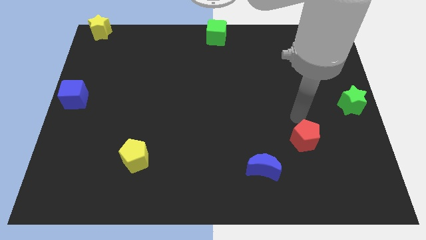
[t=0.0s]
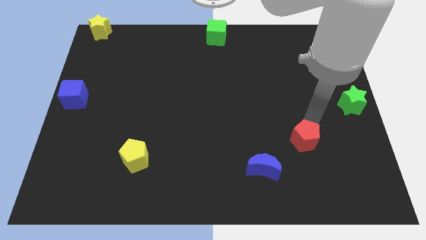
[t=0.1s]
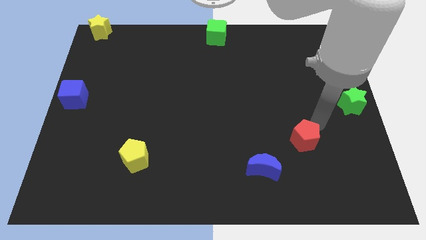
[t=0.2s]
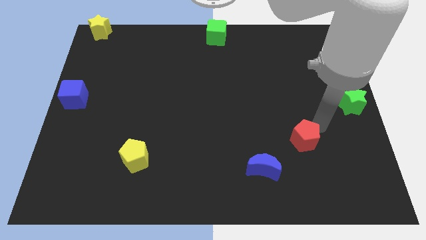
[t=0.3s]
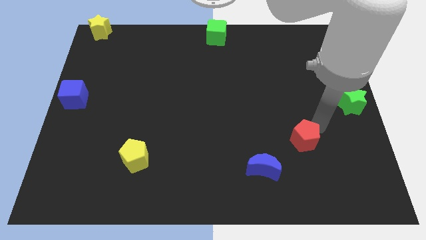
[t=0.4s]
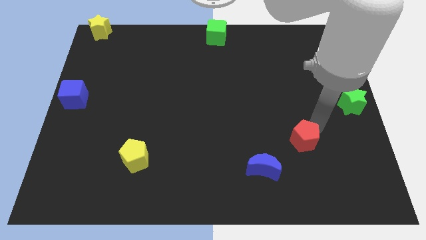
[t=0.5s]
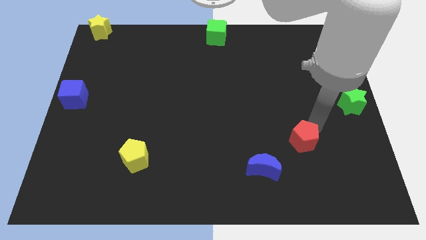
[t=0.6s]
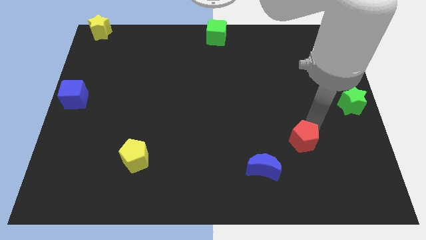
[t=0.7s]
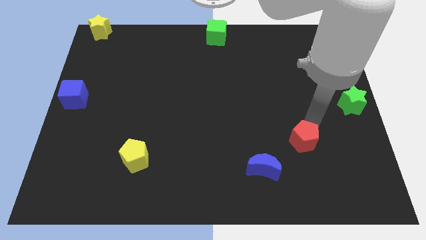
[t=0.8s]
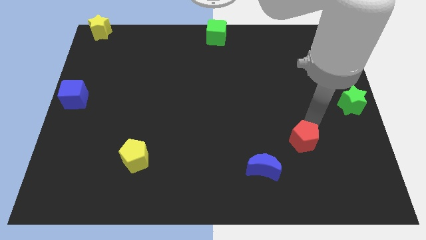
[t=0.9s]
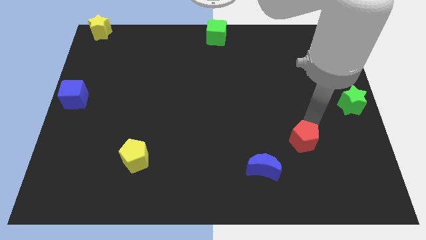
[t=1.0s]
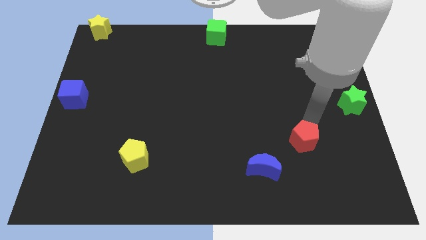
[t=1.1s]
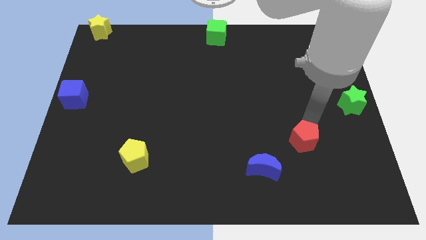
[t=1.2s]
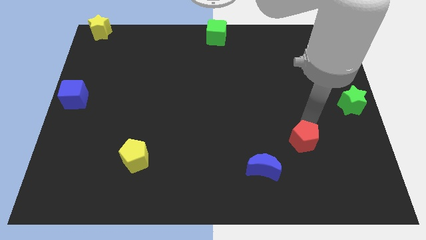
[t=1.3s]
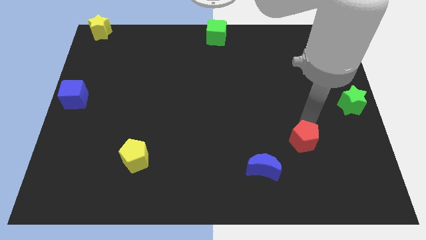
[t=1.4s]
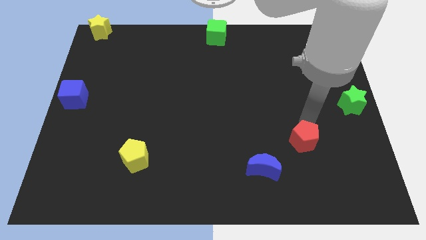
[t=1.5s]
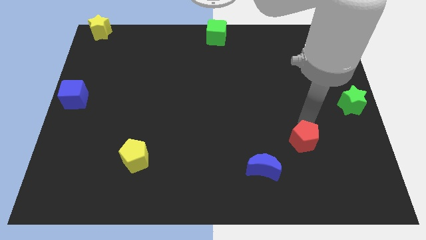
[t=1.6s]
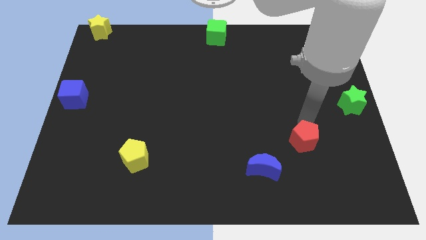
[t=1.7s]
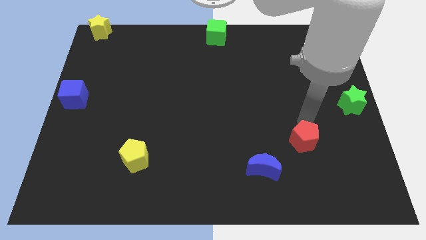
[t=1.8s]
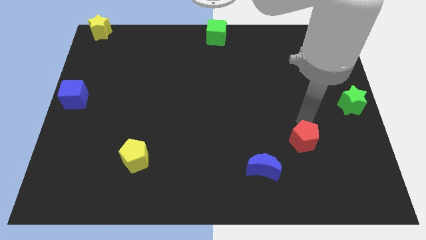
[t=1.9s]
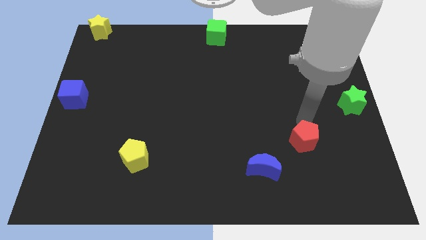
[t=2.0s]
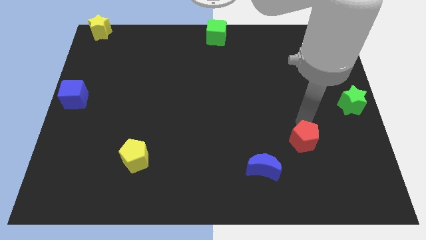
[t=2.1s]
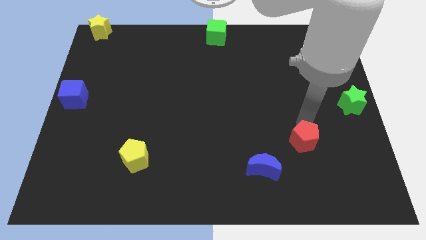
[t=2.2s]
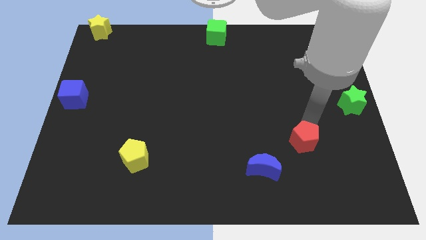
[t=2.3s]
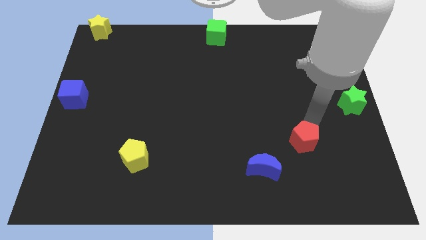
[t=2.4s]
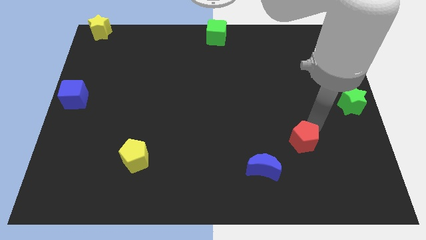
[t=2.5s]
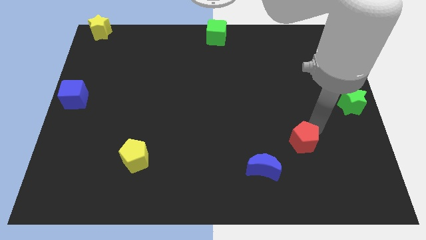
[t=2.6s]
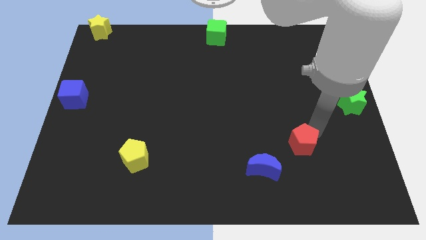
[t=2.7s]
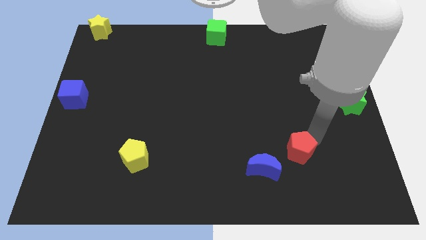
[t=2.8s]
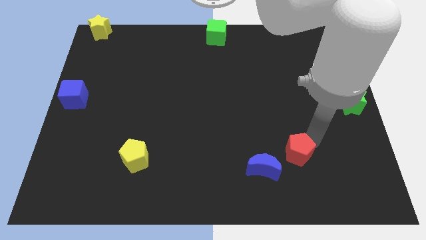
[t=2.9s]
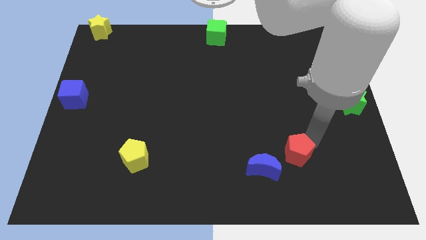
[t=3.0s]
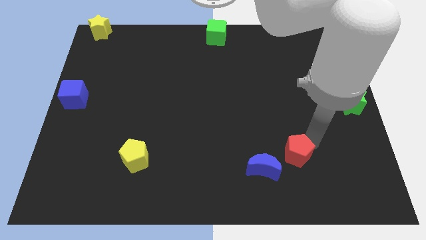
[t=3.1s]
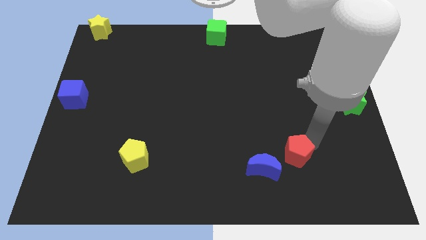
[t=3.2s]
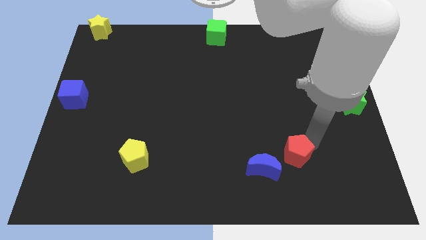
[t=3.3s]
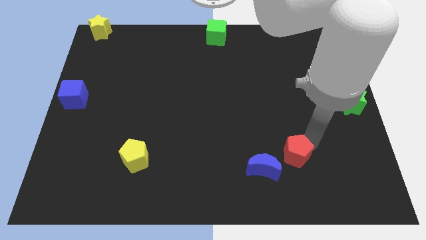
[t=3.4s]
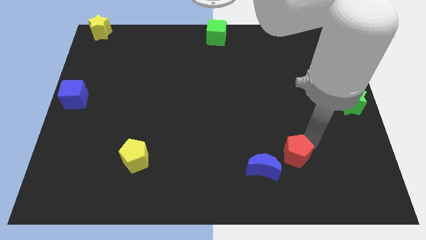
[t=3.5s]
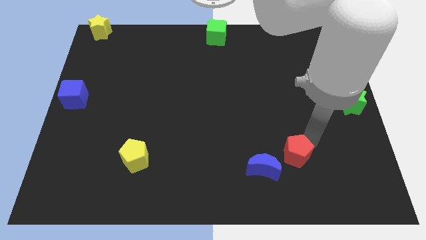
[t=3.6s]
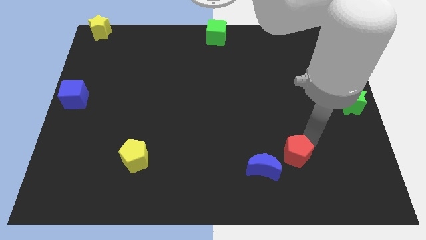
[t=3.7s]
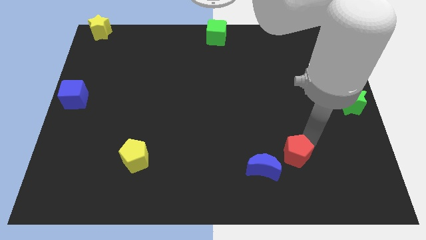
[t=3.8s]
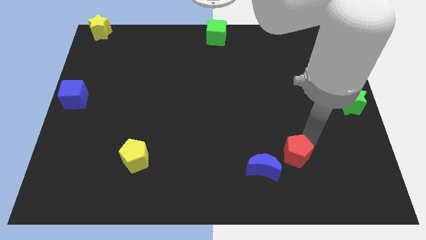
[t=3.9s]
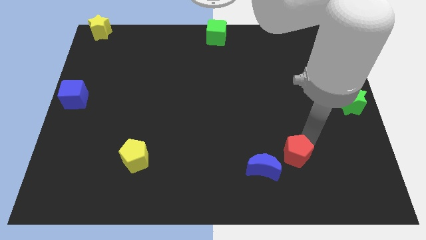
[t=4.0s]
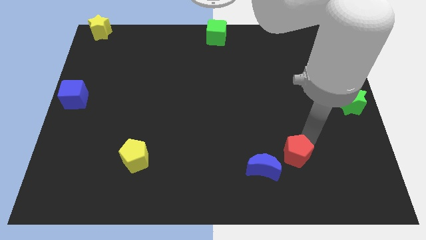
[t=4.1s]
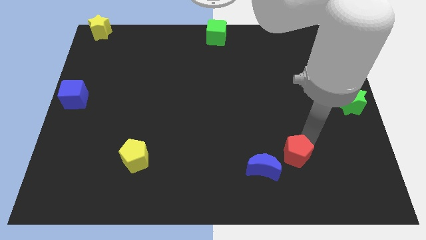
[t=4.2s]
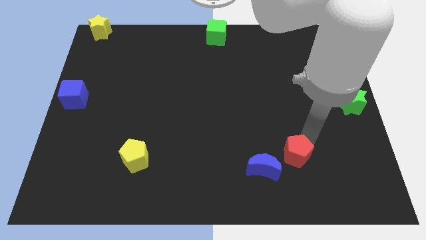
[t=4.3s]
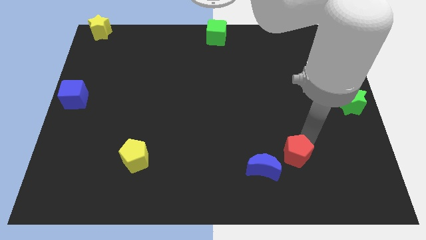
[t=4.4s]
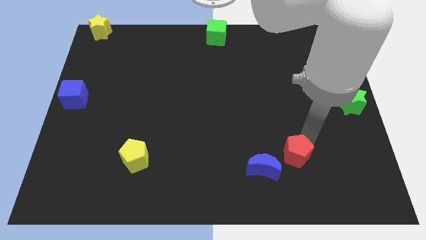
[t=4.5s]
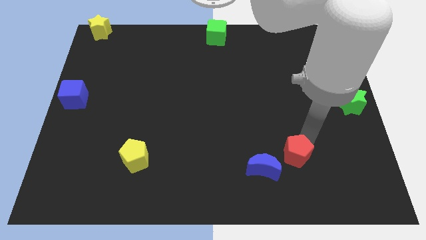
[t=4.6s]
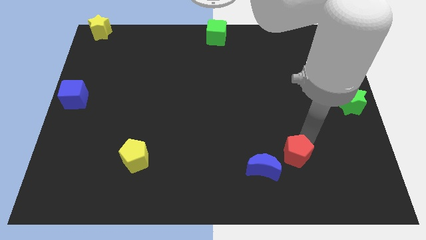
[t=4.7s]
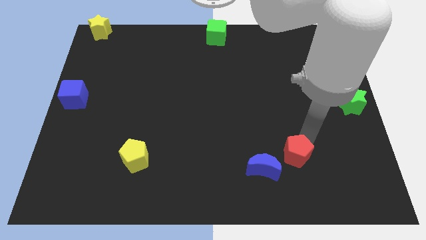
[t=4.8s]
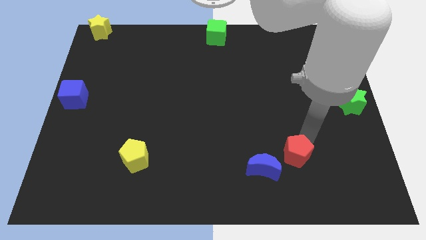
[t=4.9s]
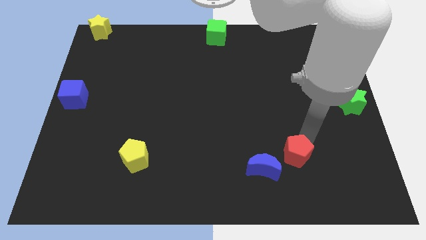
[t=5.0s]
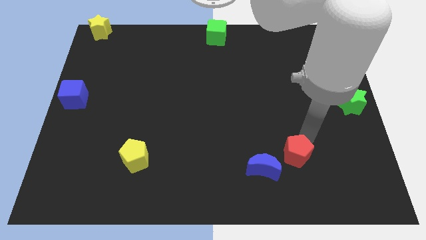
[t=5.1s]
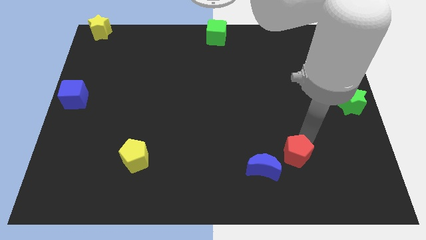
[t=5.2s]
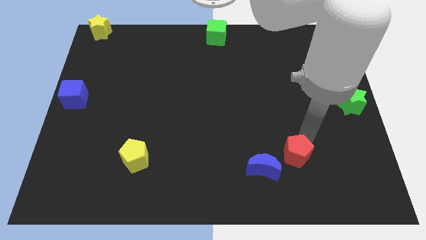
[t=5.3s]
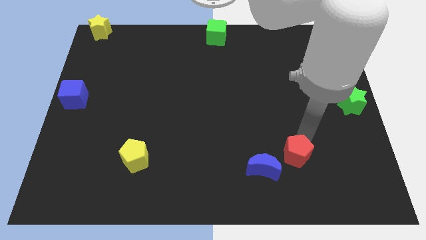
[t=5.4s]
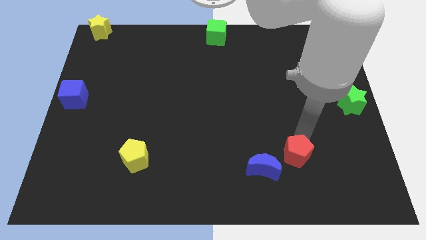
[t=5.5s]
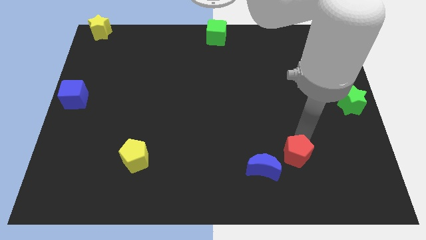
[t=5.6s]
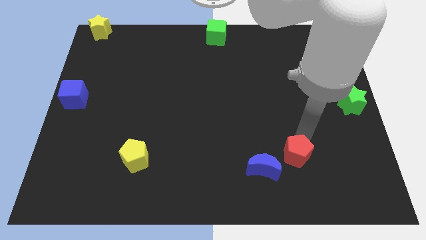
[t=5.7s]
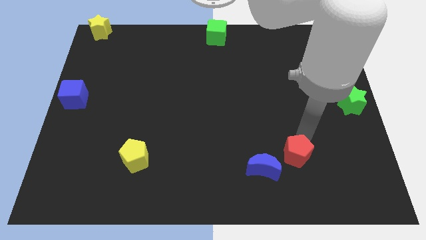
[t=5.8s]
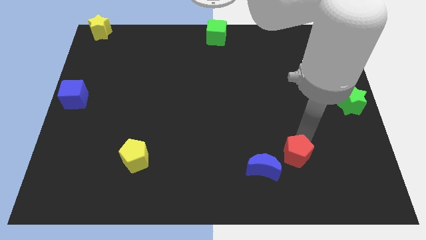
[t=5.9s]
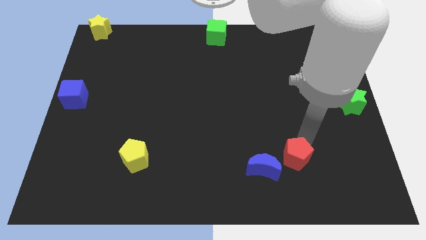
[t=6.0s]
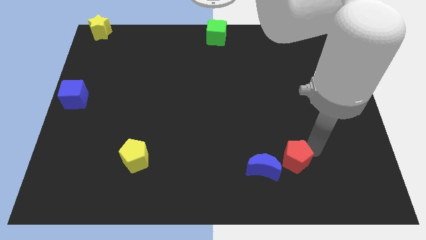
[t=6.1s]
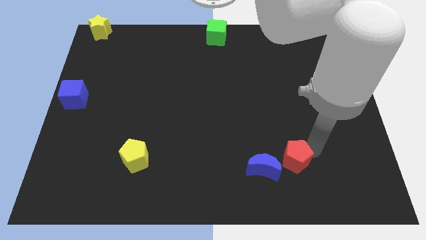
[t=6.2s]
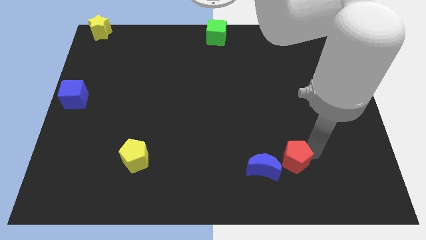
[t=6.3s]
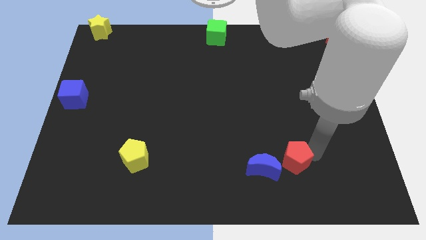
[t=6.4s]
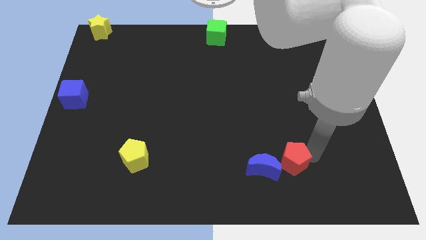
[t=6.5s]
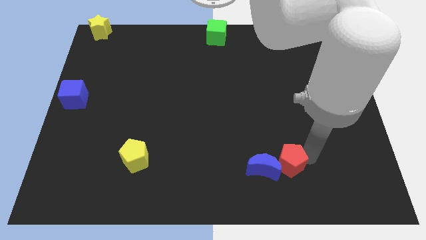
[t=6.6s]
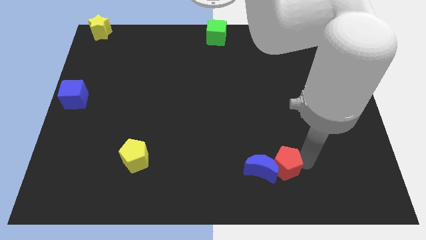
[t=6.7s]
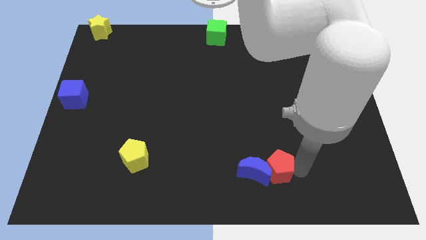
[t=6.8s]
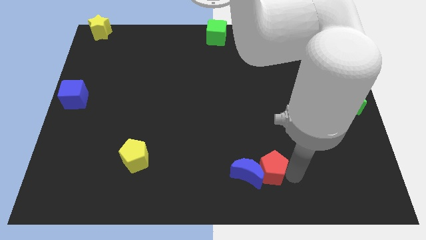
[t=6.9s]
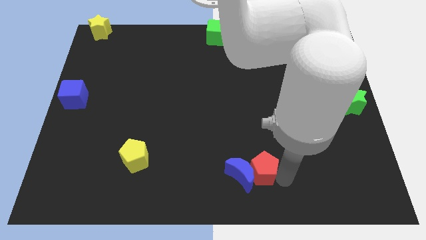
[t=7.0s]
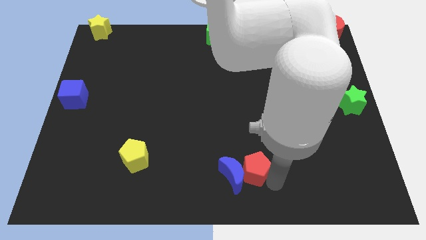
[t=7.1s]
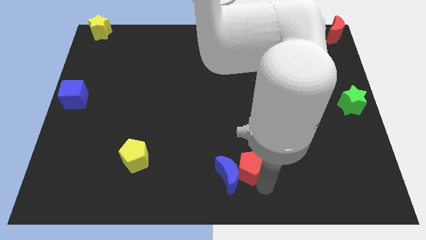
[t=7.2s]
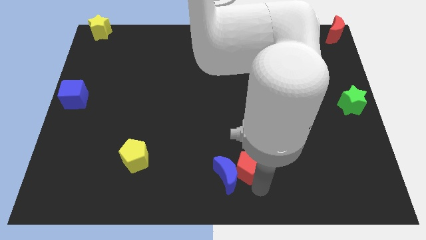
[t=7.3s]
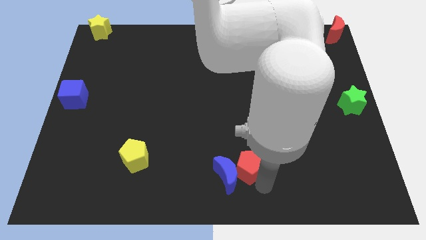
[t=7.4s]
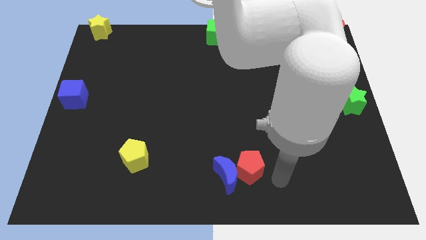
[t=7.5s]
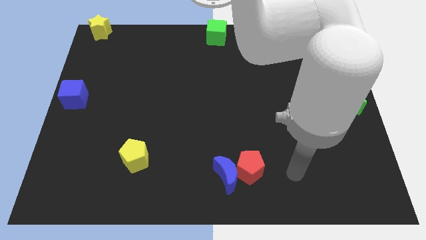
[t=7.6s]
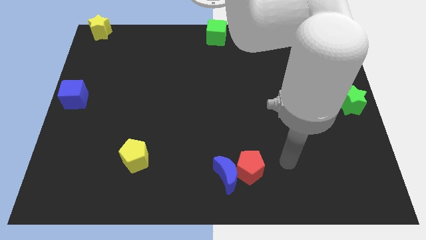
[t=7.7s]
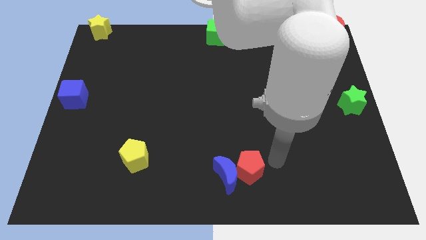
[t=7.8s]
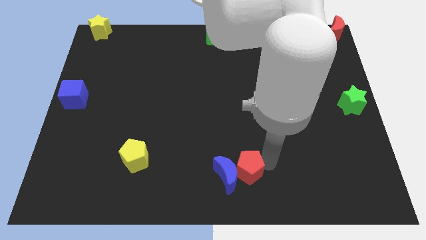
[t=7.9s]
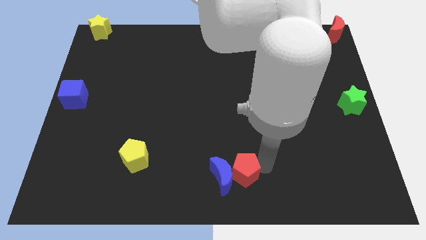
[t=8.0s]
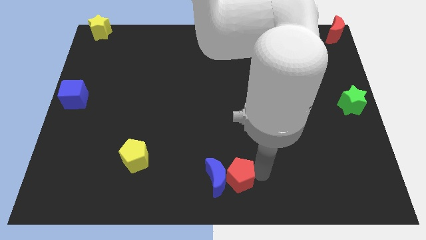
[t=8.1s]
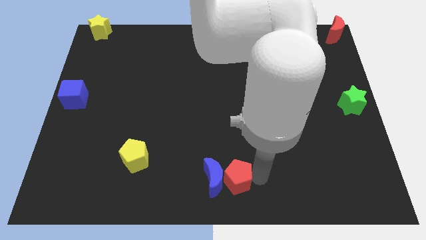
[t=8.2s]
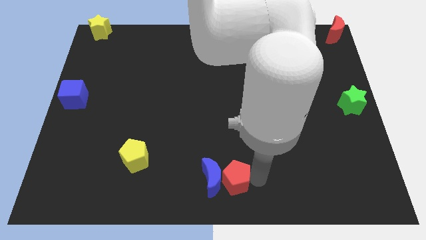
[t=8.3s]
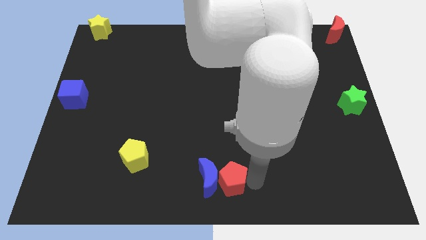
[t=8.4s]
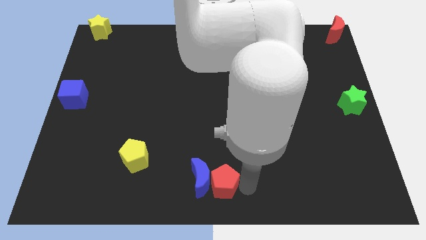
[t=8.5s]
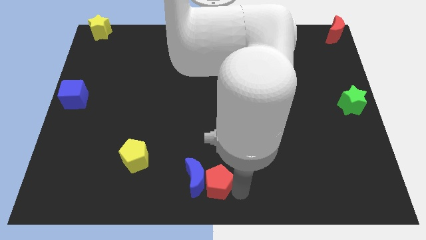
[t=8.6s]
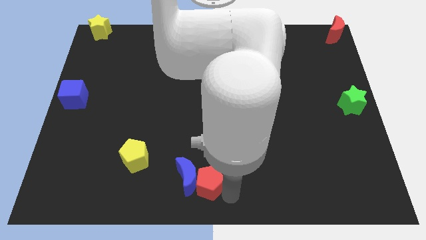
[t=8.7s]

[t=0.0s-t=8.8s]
push red pentagon into blue moon

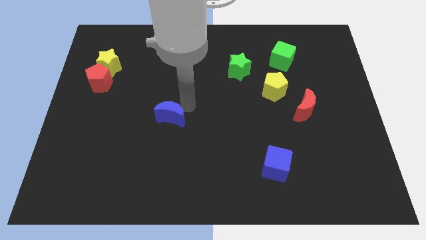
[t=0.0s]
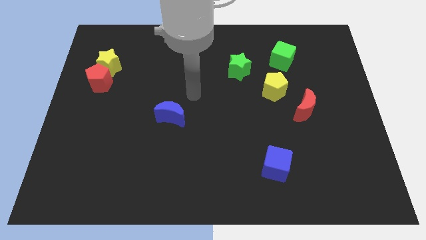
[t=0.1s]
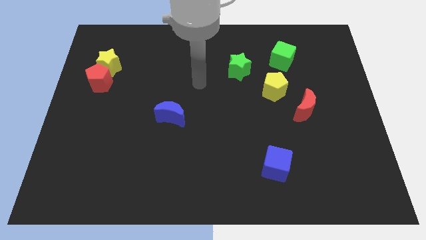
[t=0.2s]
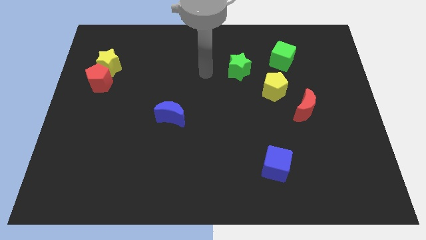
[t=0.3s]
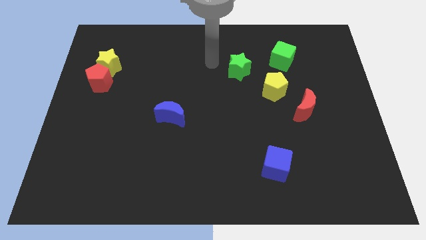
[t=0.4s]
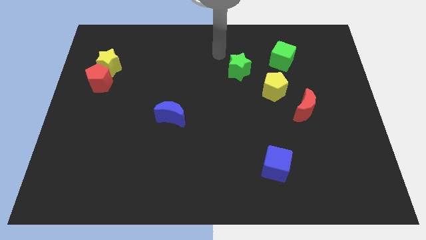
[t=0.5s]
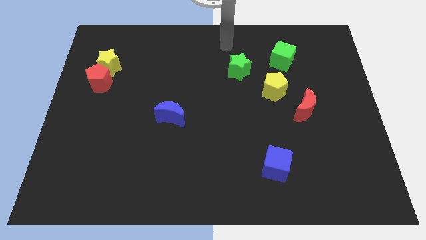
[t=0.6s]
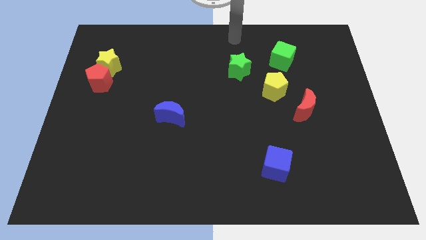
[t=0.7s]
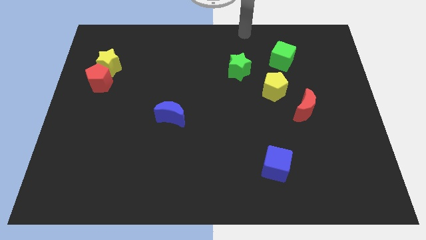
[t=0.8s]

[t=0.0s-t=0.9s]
move your arm towards the top side of the board
